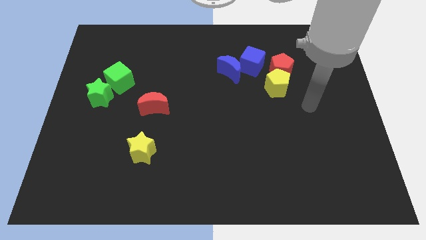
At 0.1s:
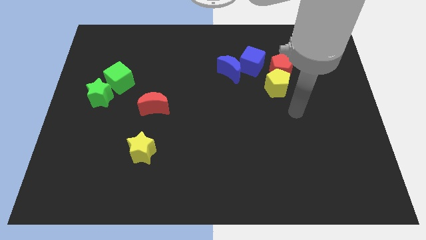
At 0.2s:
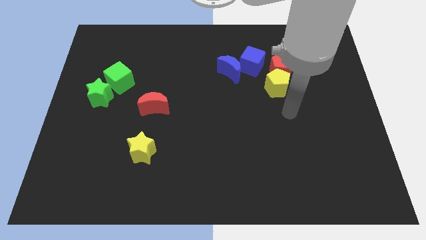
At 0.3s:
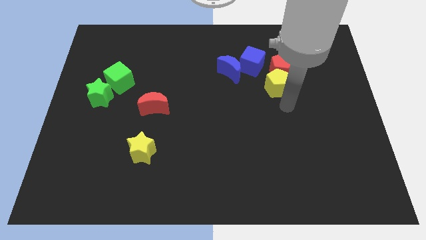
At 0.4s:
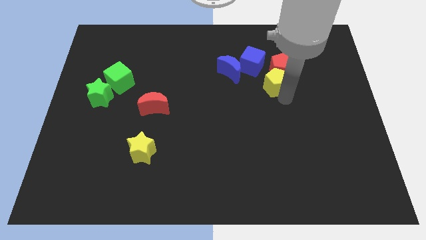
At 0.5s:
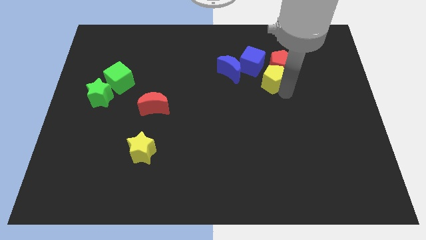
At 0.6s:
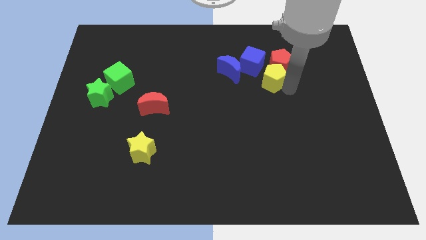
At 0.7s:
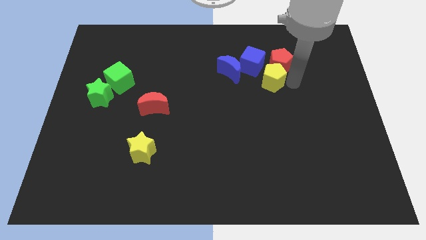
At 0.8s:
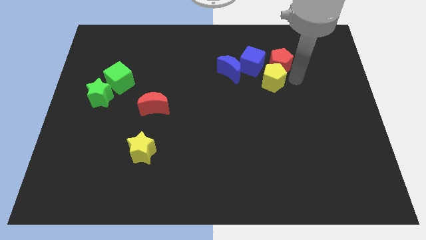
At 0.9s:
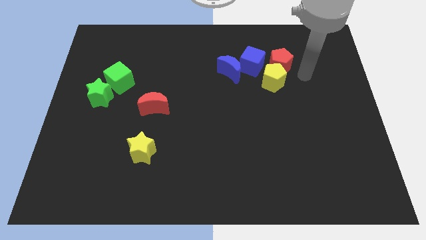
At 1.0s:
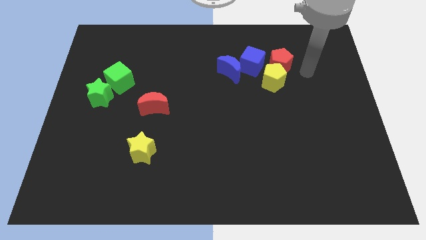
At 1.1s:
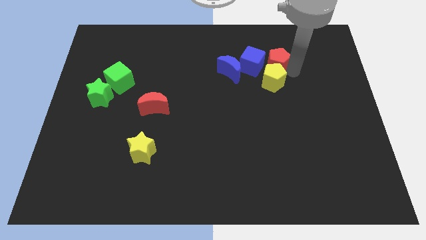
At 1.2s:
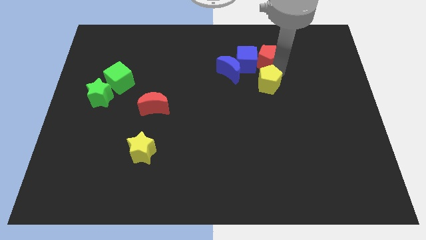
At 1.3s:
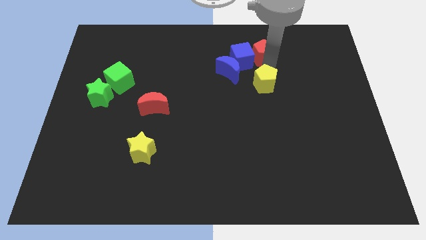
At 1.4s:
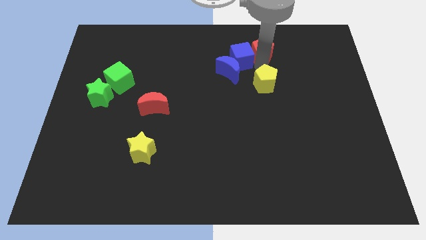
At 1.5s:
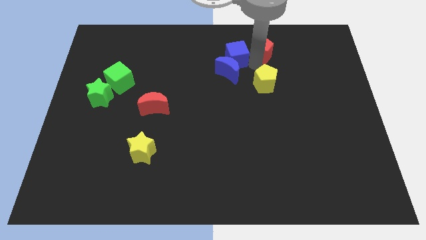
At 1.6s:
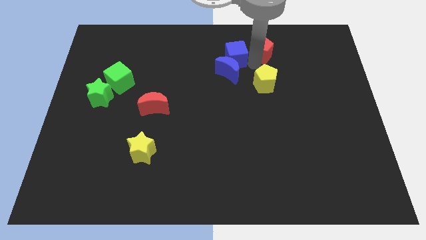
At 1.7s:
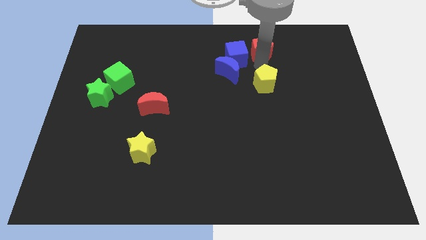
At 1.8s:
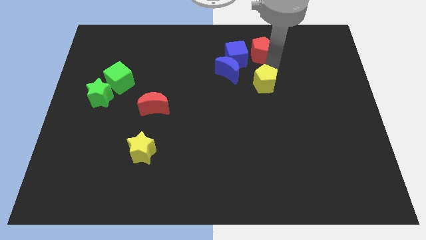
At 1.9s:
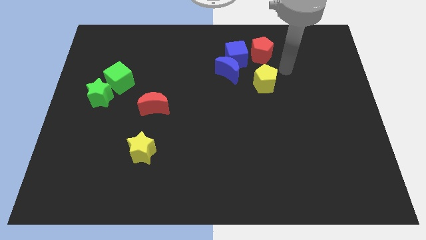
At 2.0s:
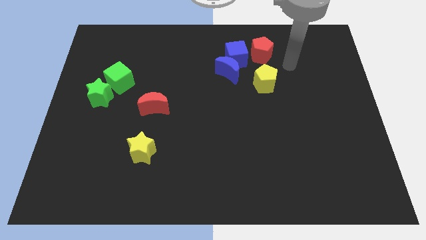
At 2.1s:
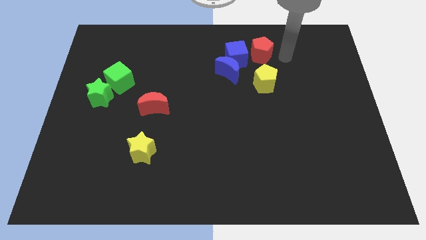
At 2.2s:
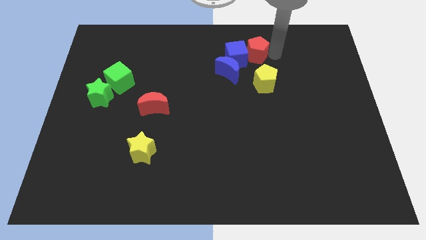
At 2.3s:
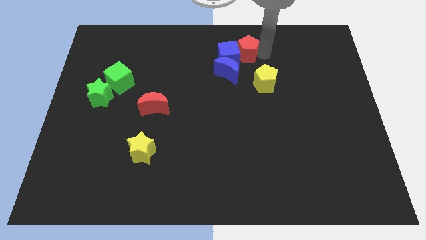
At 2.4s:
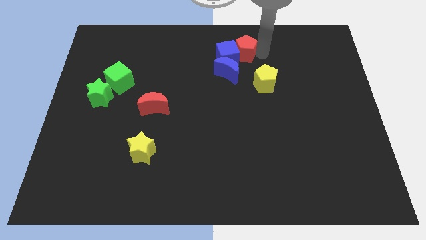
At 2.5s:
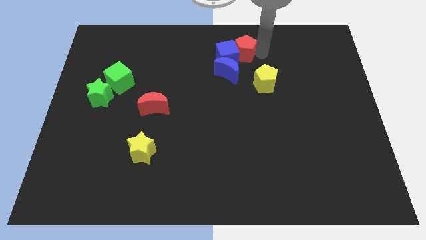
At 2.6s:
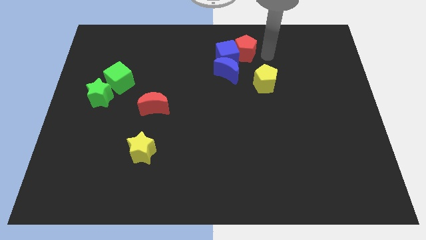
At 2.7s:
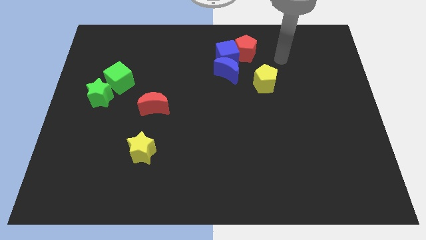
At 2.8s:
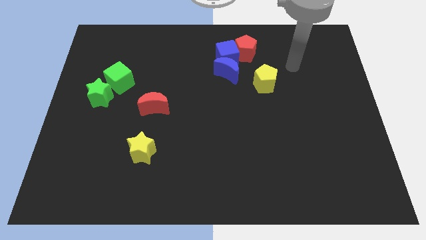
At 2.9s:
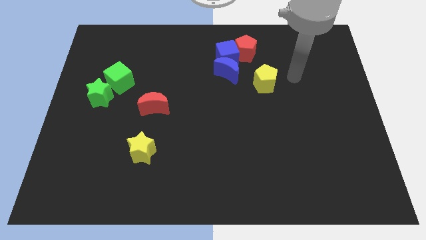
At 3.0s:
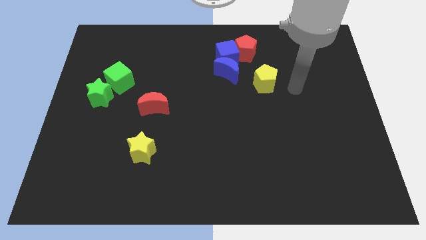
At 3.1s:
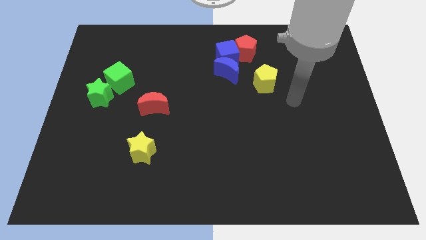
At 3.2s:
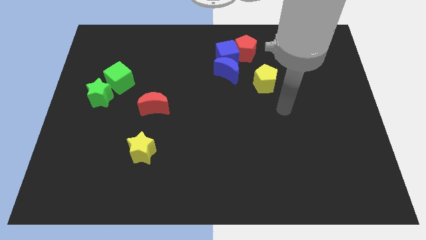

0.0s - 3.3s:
push the red pentagon into the blue cube

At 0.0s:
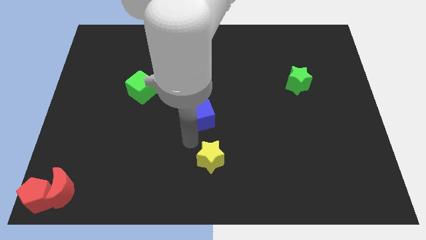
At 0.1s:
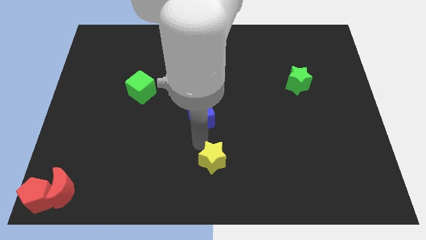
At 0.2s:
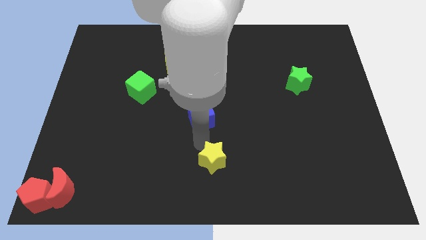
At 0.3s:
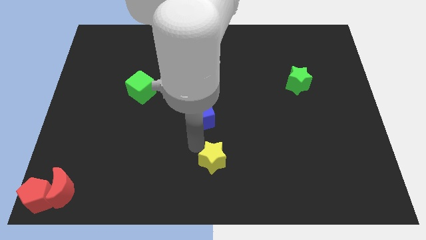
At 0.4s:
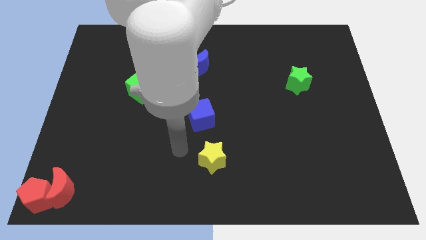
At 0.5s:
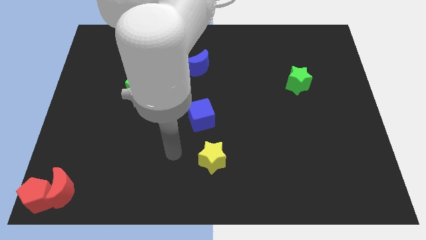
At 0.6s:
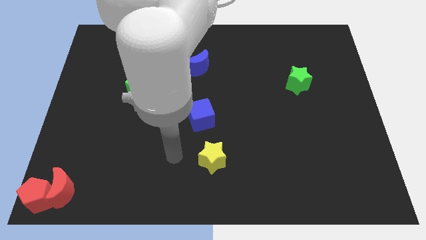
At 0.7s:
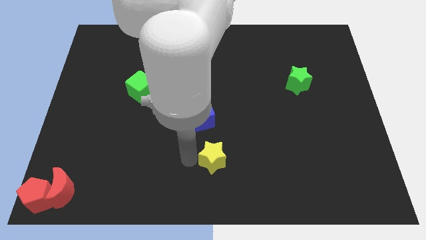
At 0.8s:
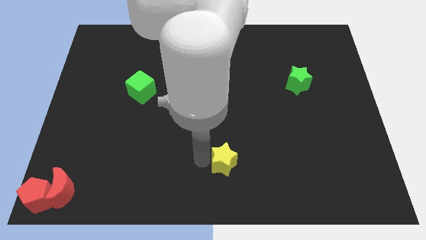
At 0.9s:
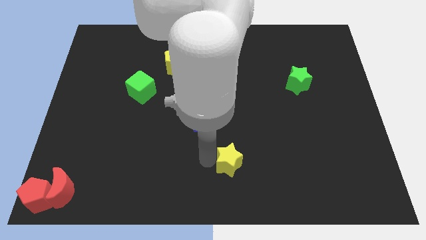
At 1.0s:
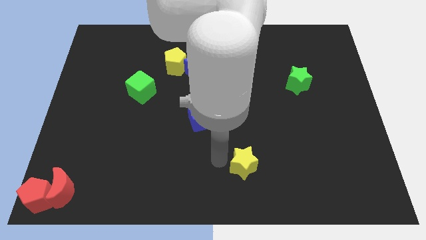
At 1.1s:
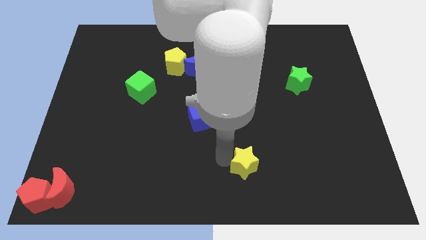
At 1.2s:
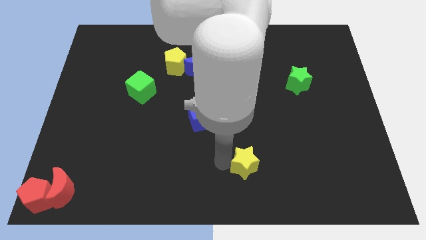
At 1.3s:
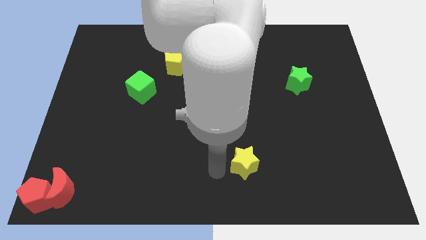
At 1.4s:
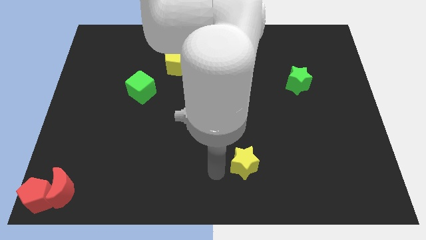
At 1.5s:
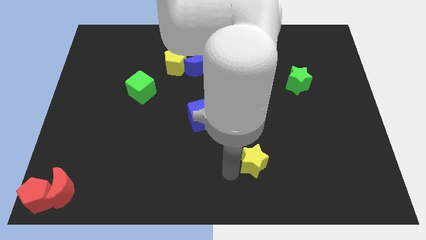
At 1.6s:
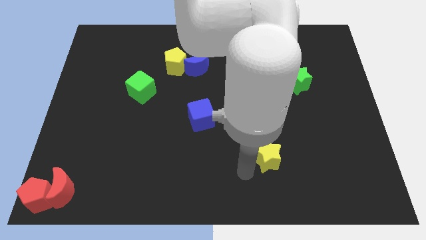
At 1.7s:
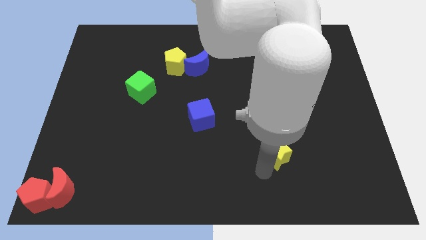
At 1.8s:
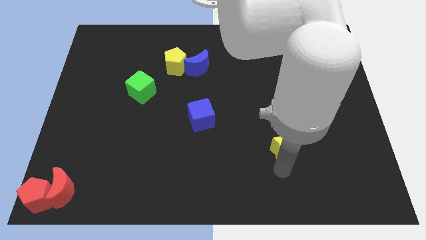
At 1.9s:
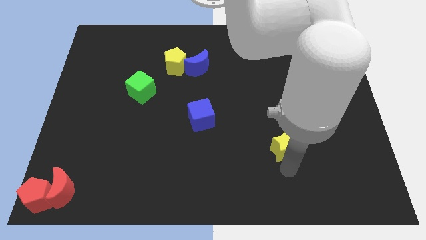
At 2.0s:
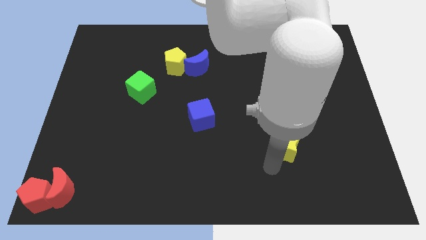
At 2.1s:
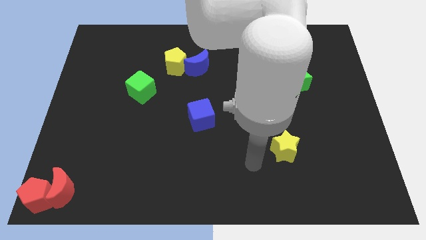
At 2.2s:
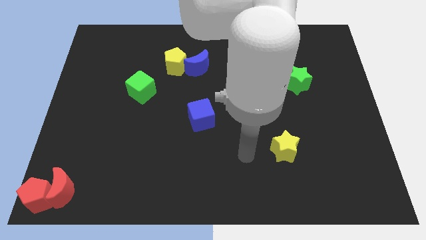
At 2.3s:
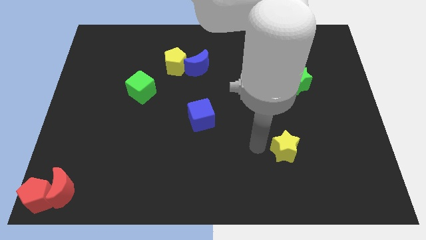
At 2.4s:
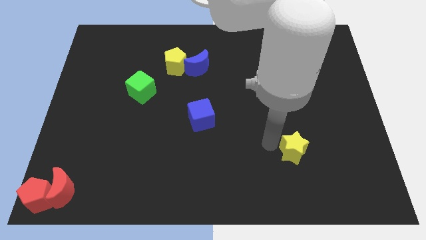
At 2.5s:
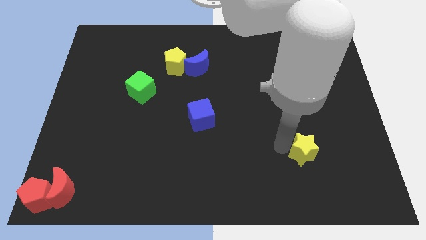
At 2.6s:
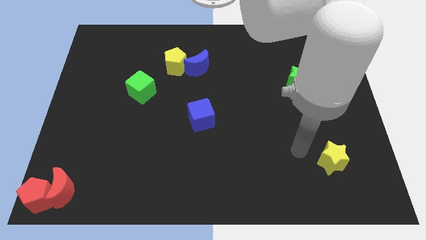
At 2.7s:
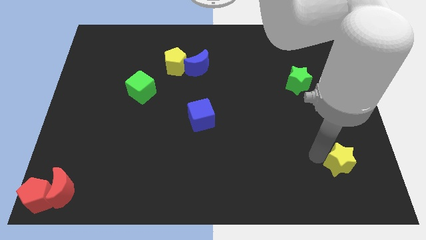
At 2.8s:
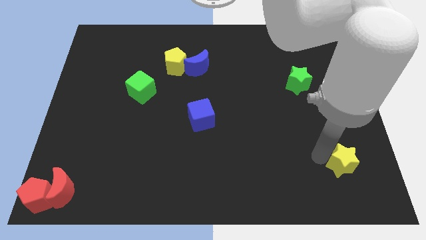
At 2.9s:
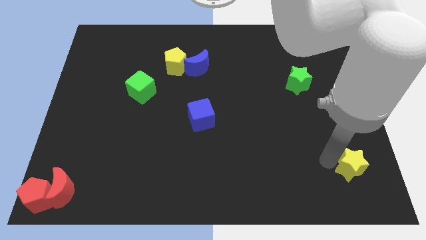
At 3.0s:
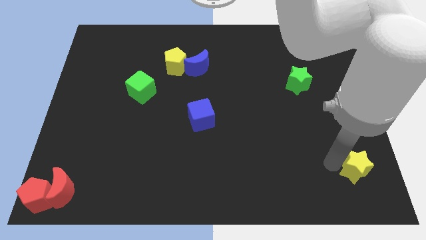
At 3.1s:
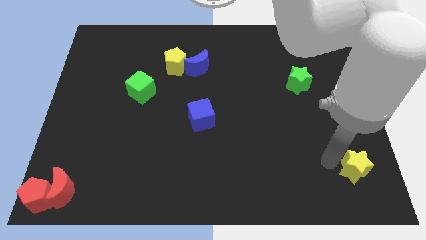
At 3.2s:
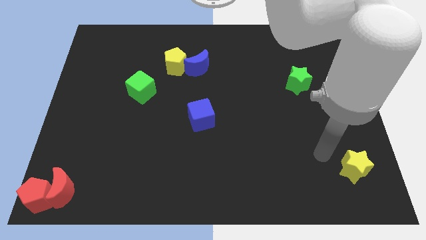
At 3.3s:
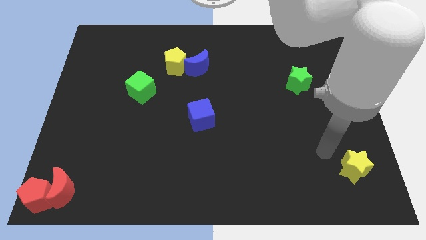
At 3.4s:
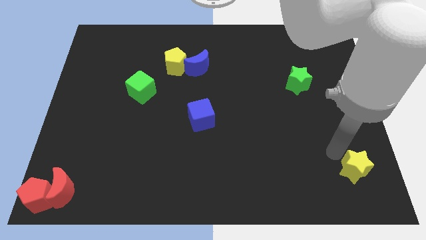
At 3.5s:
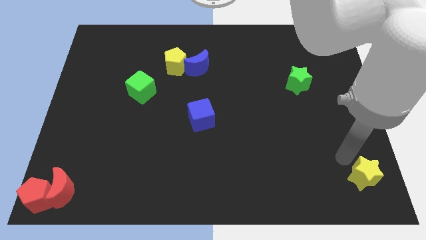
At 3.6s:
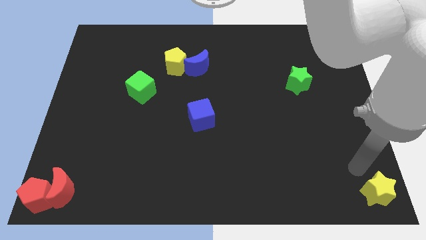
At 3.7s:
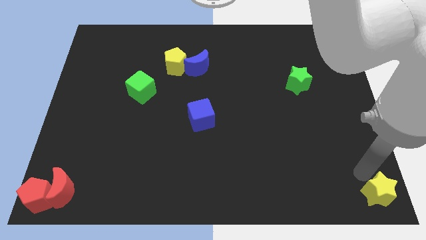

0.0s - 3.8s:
push the yellow star towards the bottom right corner of the board

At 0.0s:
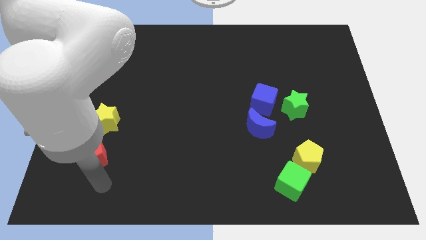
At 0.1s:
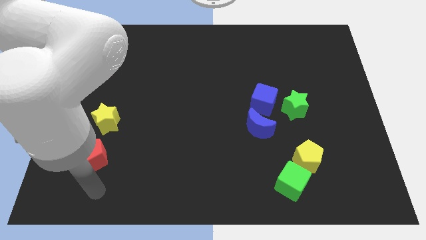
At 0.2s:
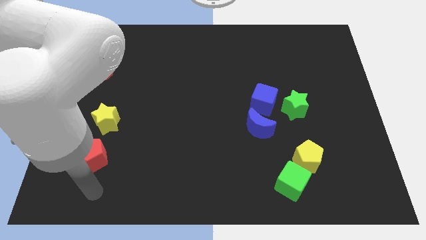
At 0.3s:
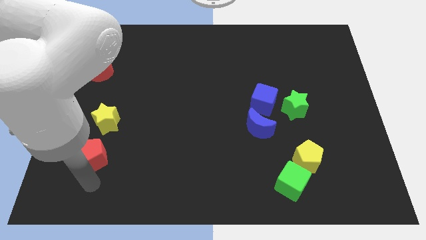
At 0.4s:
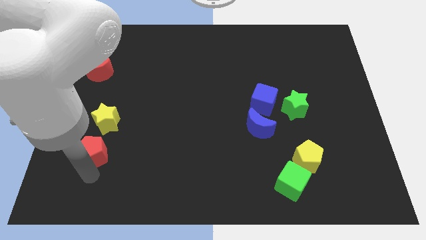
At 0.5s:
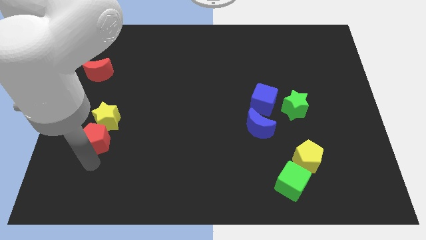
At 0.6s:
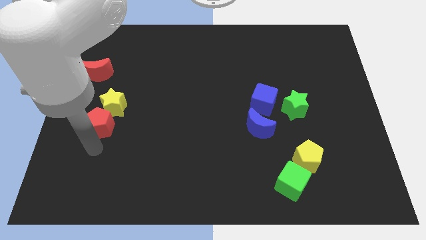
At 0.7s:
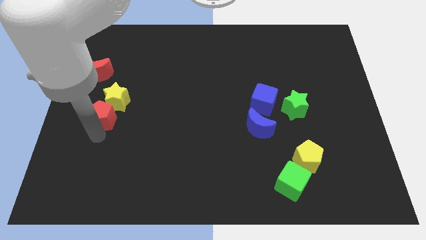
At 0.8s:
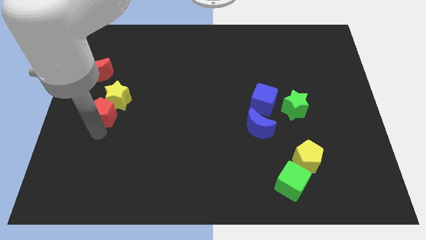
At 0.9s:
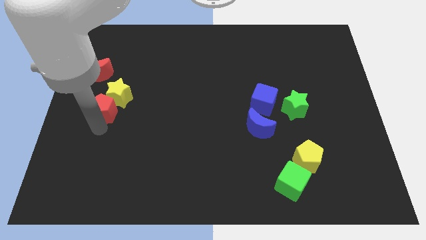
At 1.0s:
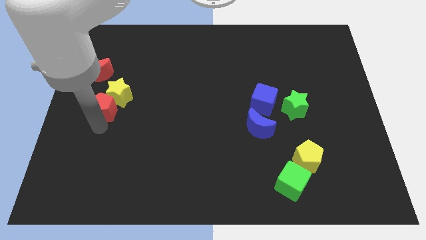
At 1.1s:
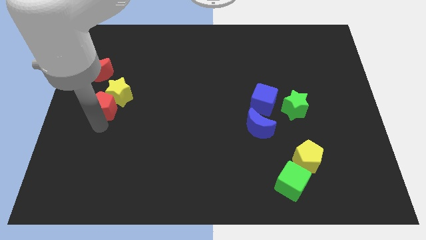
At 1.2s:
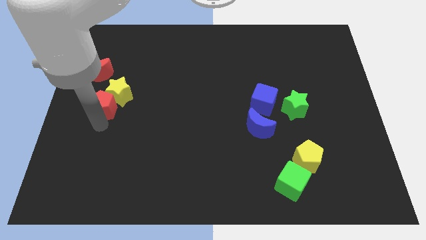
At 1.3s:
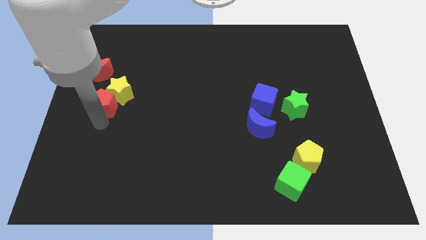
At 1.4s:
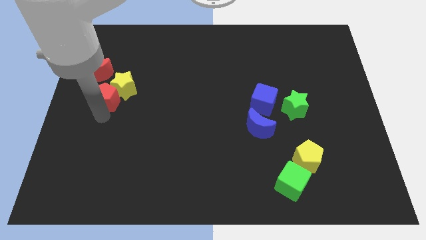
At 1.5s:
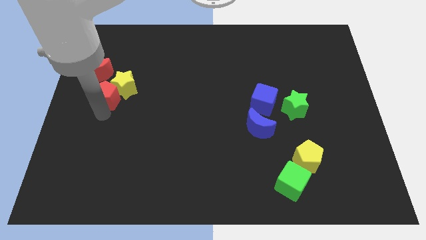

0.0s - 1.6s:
move the red pentagon below the yellow star

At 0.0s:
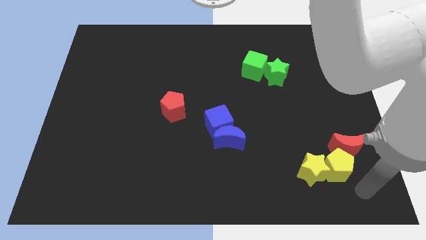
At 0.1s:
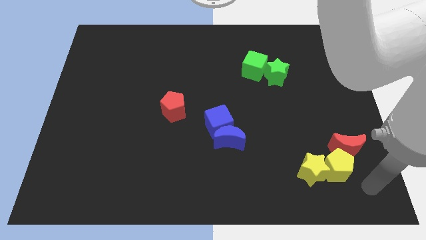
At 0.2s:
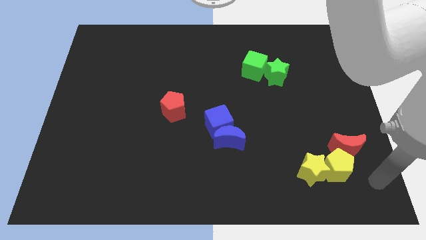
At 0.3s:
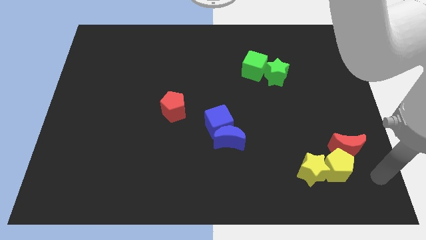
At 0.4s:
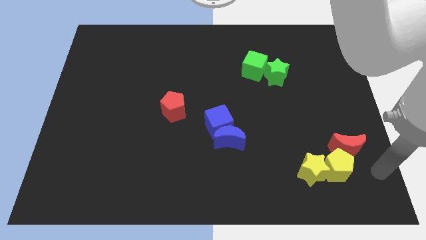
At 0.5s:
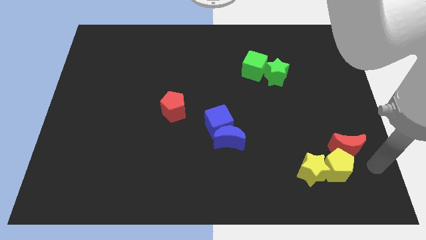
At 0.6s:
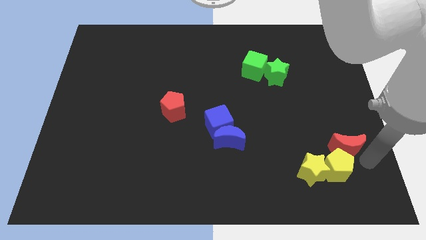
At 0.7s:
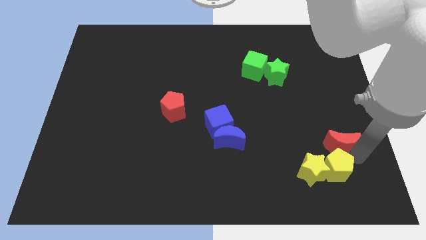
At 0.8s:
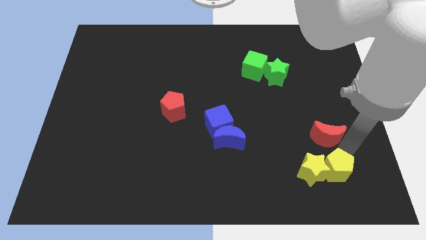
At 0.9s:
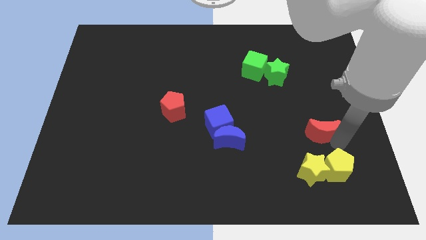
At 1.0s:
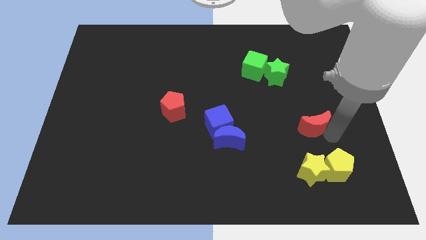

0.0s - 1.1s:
move the red moon above the yellow star
